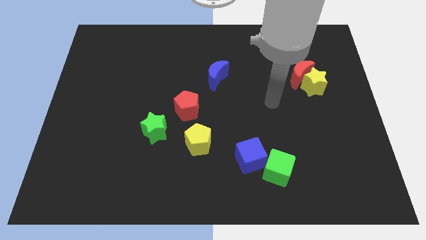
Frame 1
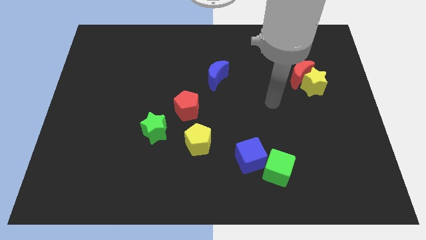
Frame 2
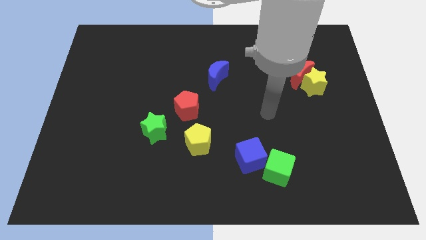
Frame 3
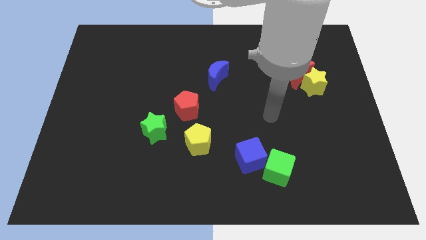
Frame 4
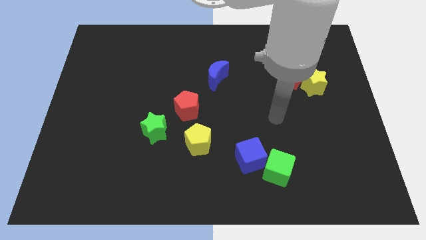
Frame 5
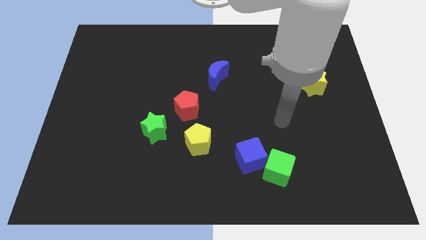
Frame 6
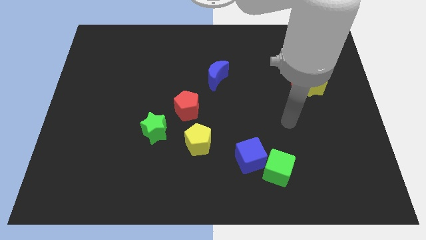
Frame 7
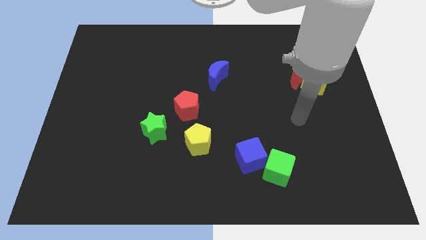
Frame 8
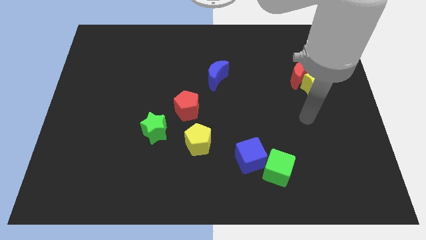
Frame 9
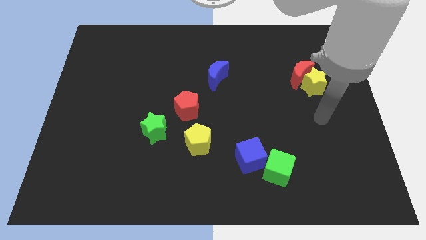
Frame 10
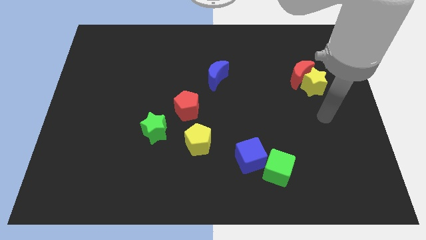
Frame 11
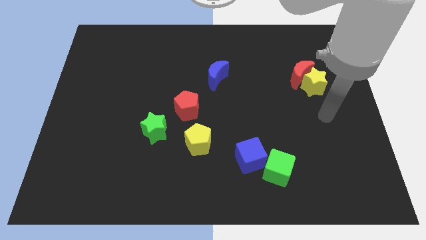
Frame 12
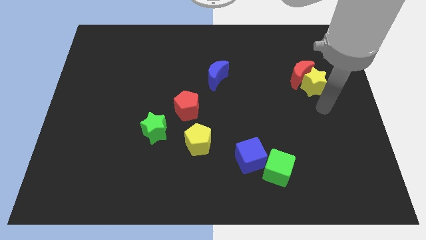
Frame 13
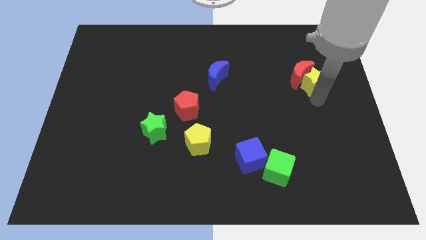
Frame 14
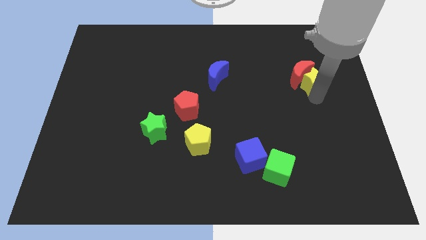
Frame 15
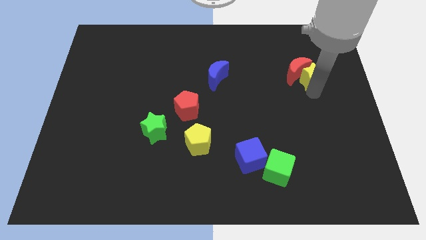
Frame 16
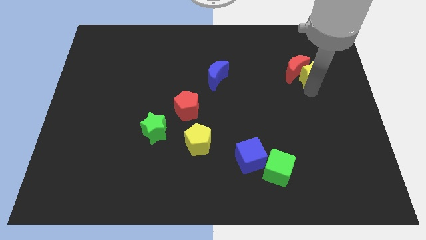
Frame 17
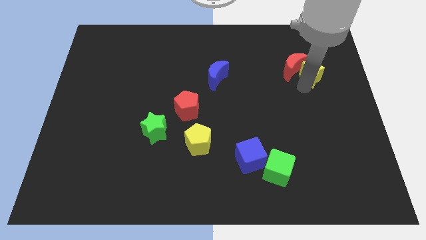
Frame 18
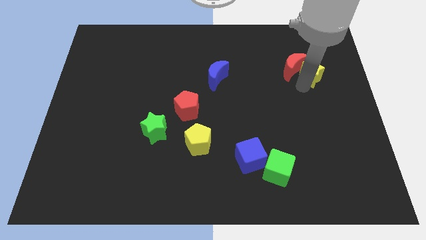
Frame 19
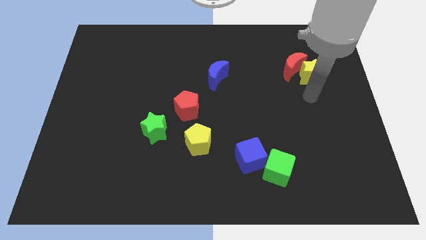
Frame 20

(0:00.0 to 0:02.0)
slightly push the yellow star and the red crescent to the top of the board

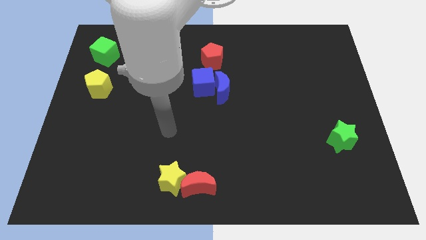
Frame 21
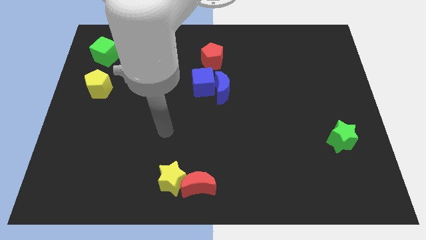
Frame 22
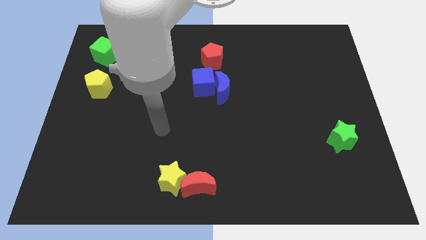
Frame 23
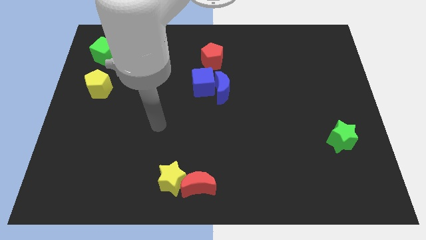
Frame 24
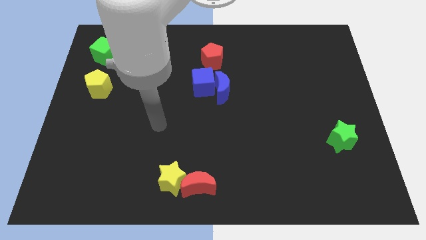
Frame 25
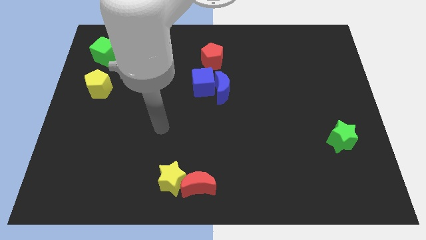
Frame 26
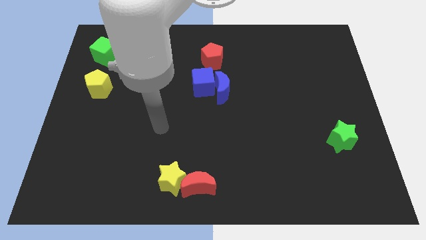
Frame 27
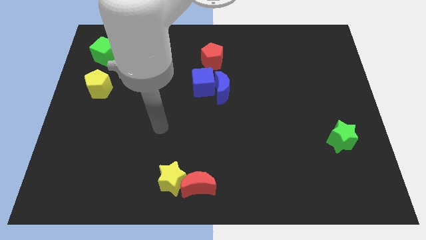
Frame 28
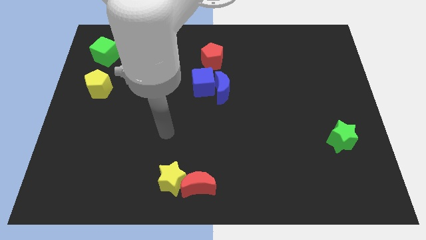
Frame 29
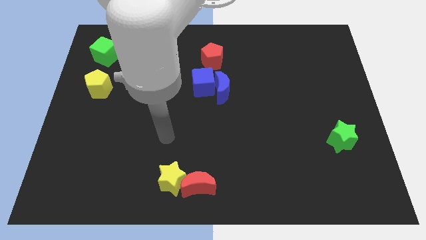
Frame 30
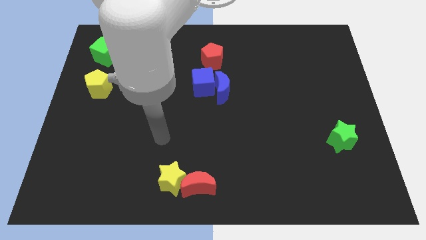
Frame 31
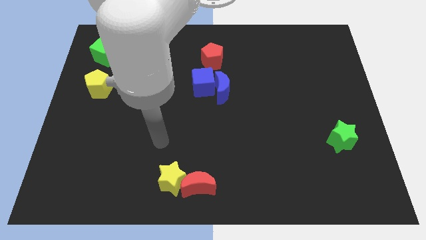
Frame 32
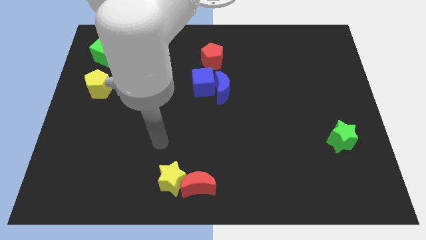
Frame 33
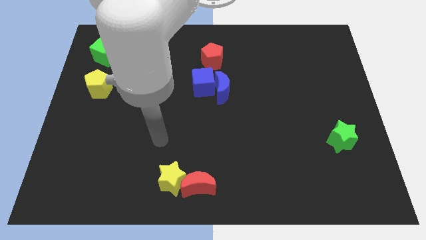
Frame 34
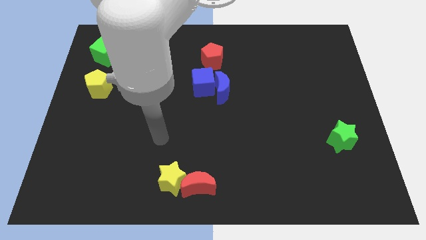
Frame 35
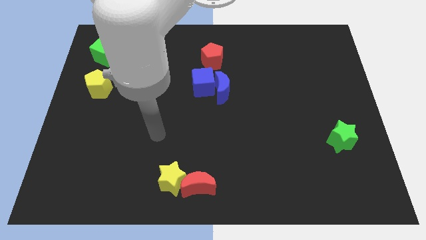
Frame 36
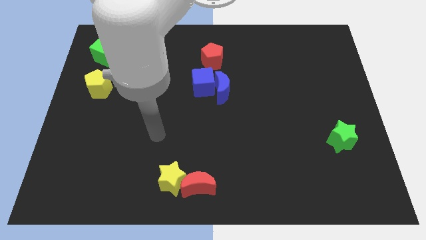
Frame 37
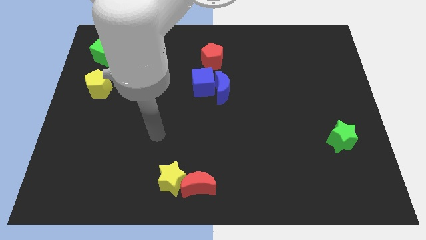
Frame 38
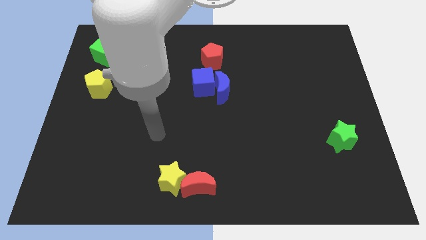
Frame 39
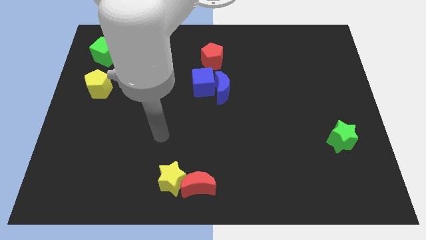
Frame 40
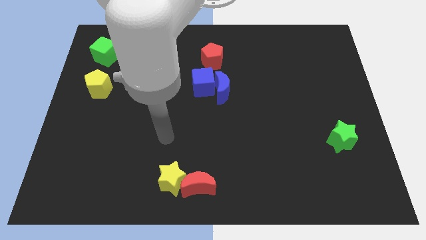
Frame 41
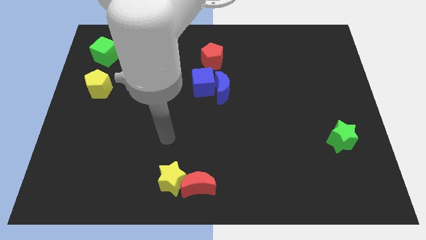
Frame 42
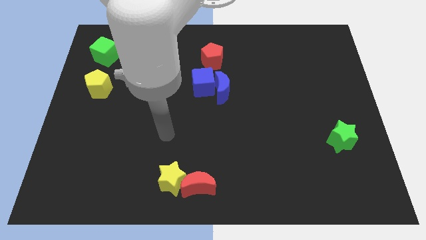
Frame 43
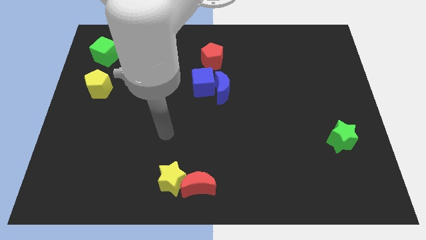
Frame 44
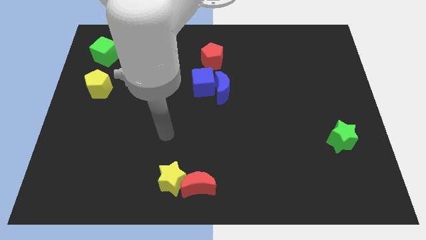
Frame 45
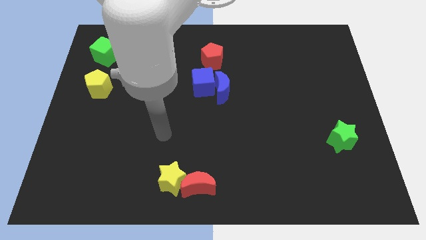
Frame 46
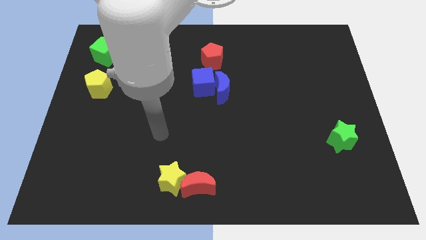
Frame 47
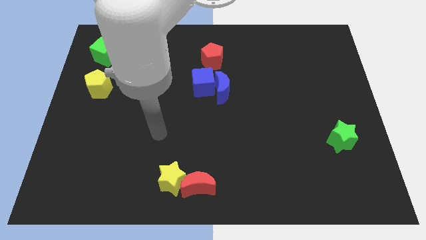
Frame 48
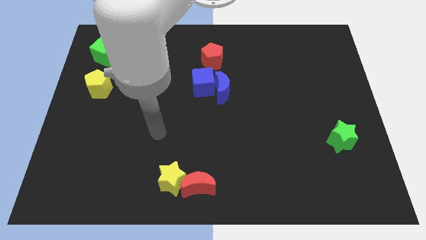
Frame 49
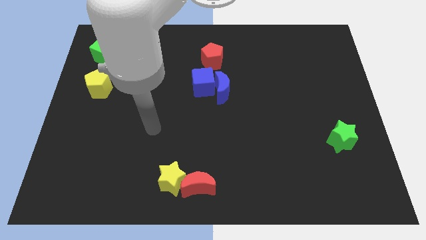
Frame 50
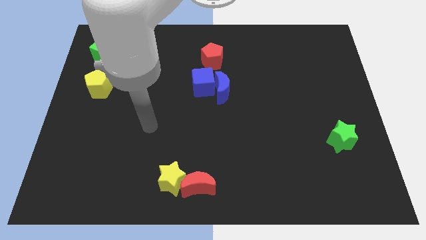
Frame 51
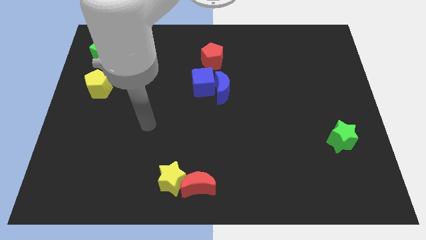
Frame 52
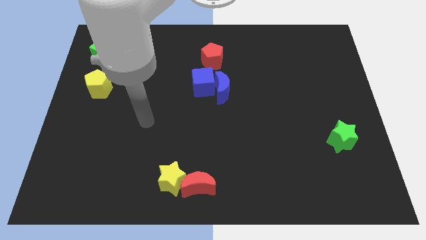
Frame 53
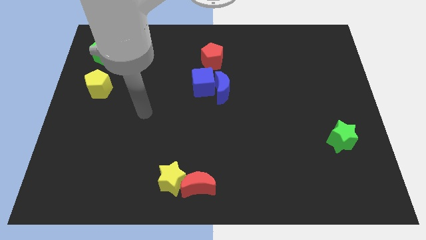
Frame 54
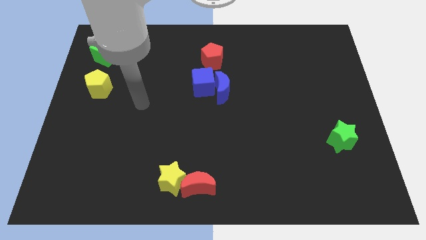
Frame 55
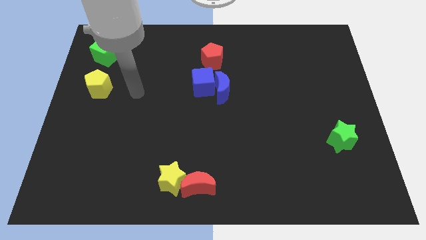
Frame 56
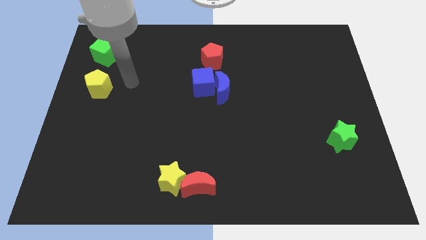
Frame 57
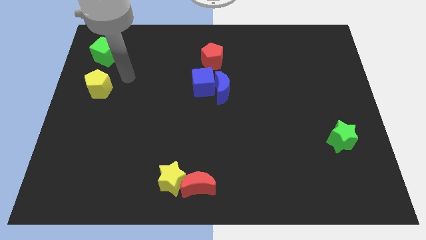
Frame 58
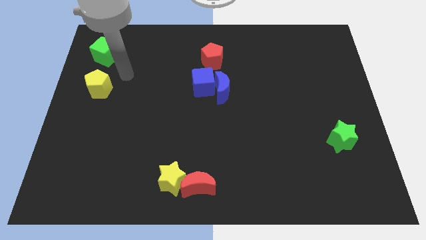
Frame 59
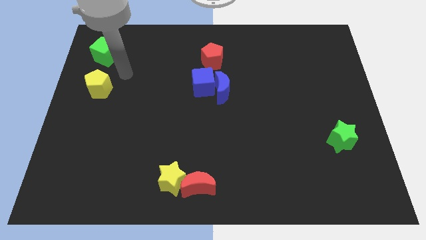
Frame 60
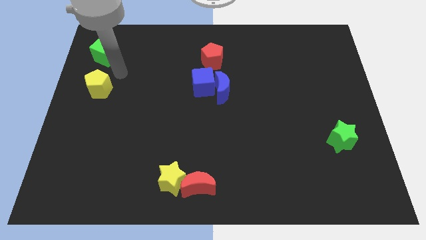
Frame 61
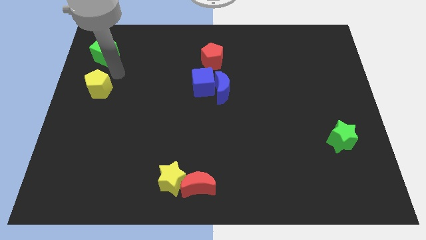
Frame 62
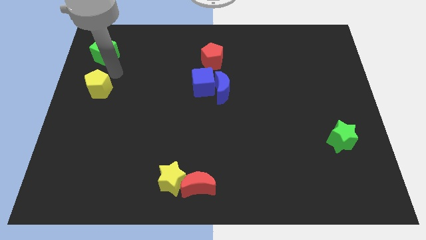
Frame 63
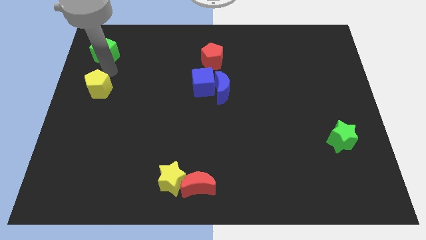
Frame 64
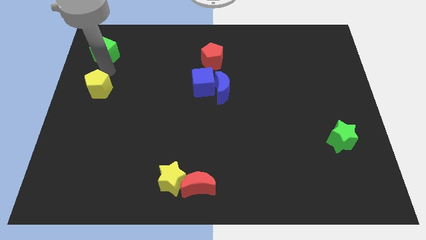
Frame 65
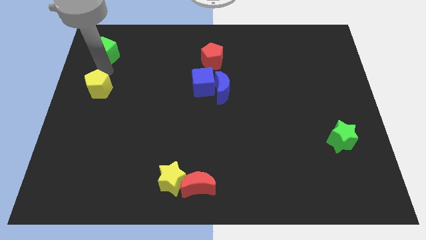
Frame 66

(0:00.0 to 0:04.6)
move close to the green cube

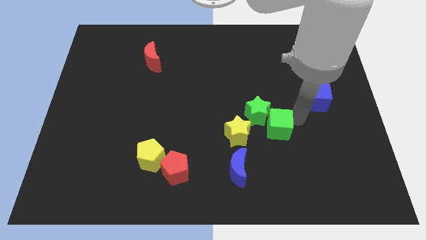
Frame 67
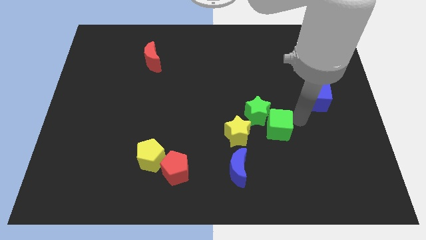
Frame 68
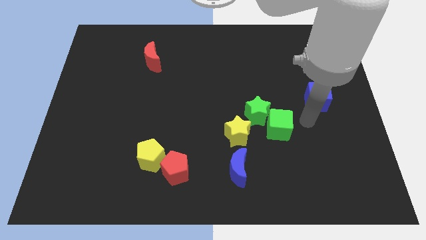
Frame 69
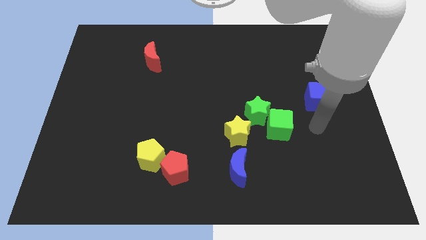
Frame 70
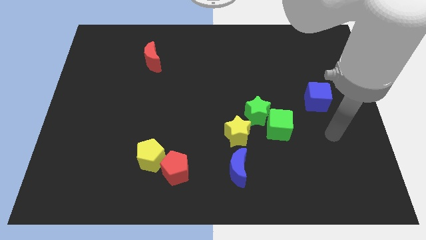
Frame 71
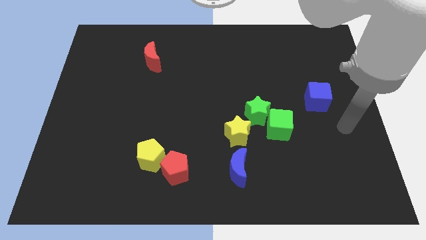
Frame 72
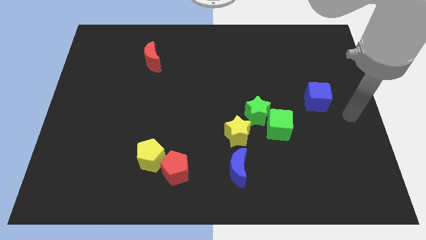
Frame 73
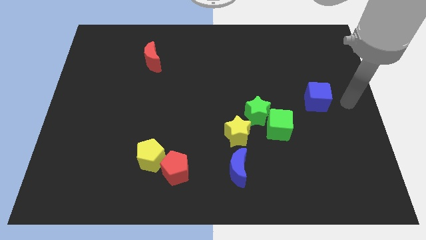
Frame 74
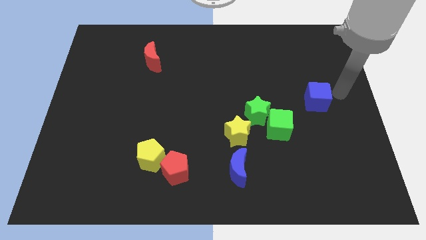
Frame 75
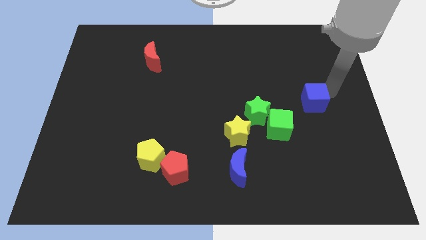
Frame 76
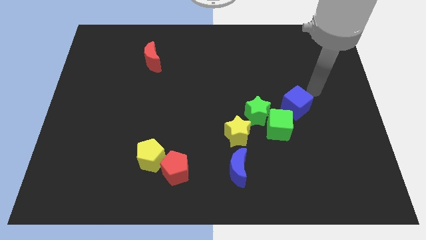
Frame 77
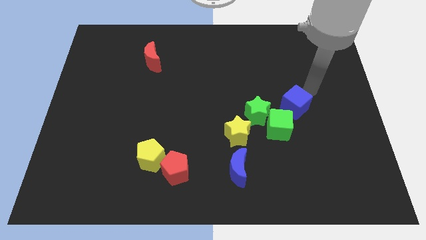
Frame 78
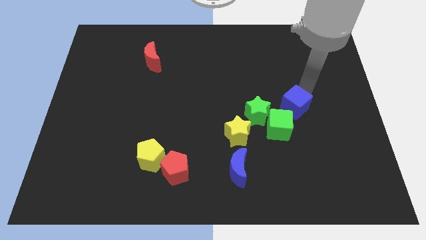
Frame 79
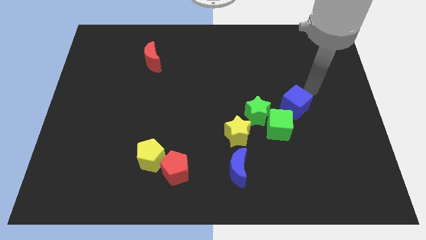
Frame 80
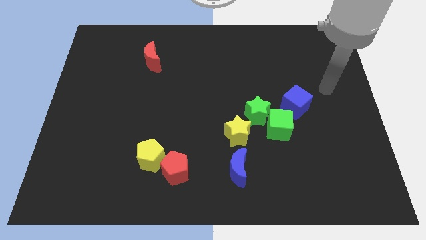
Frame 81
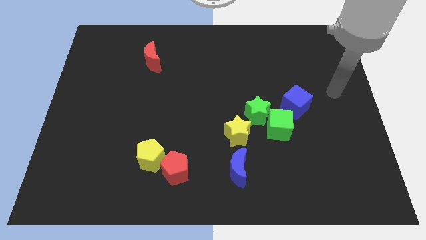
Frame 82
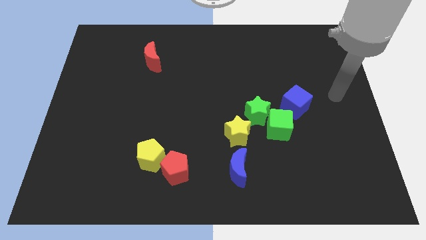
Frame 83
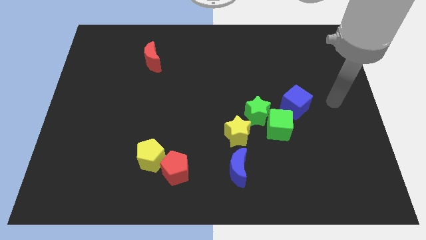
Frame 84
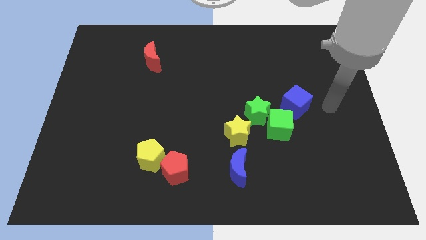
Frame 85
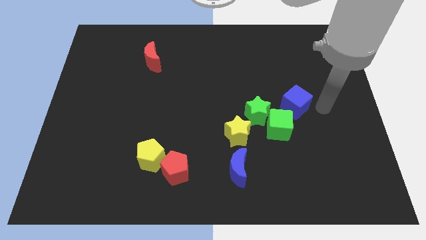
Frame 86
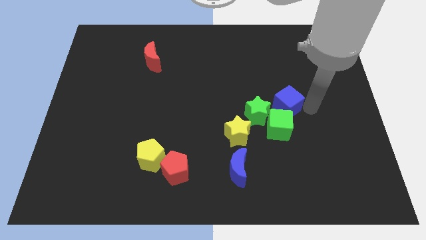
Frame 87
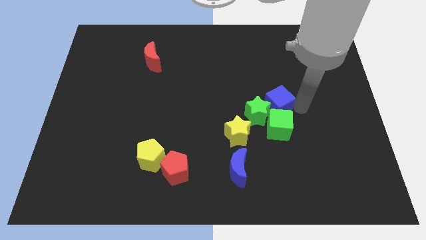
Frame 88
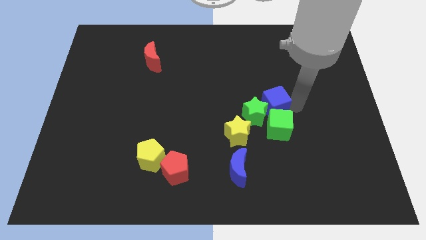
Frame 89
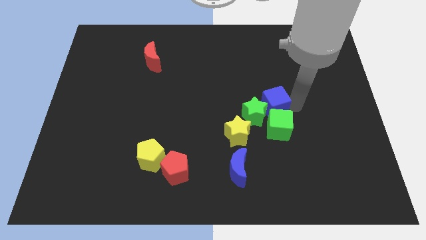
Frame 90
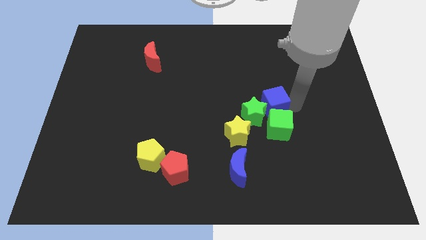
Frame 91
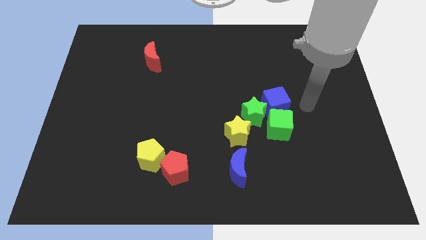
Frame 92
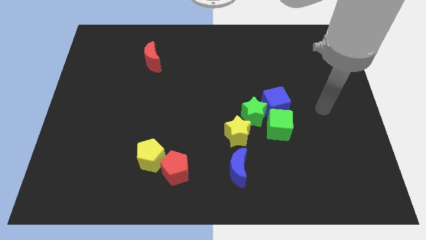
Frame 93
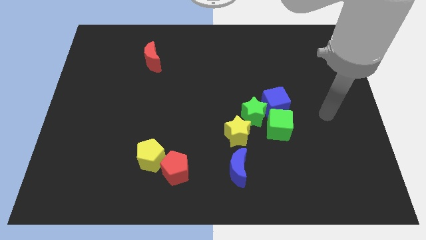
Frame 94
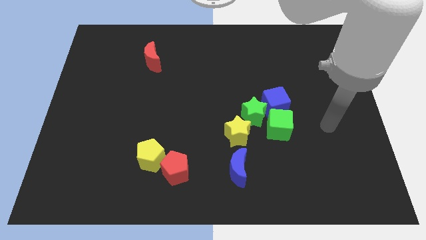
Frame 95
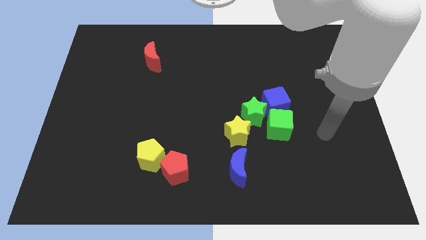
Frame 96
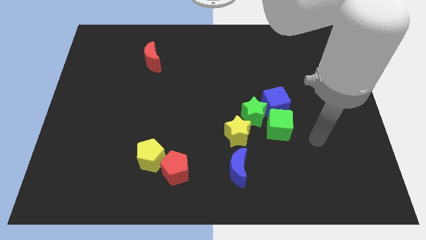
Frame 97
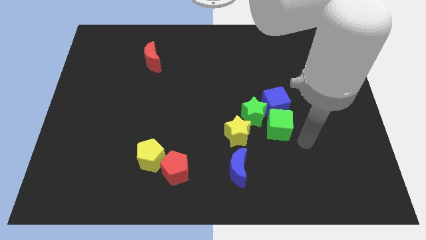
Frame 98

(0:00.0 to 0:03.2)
push the blue cube into the green star
